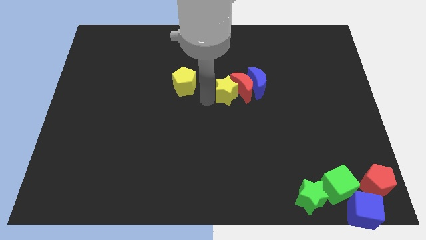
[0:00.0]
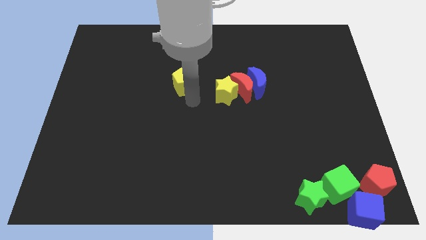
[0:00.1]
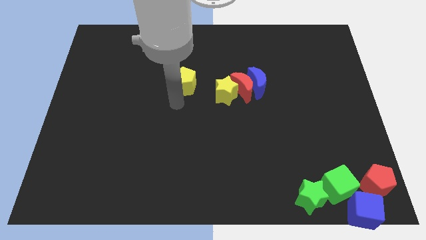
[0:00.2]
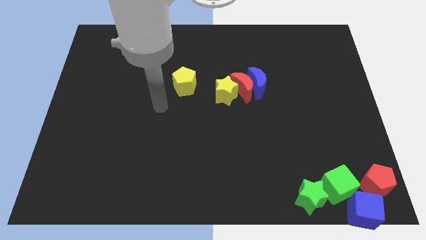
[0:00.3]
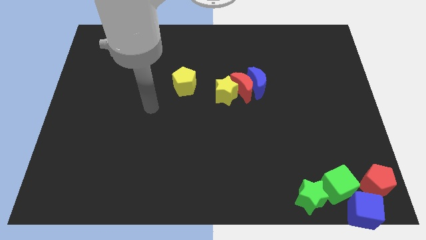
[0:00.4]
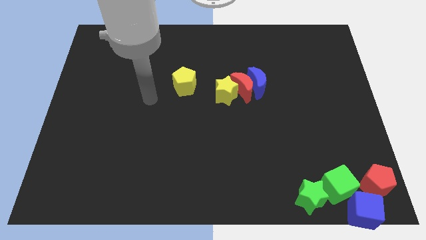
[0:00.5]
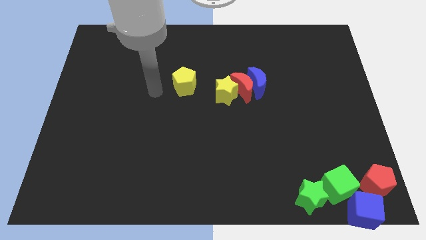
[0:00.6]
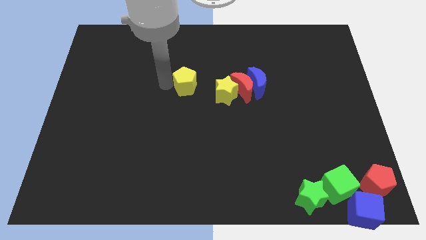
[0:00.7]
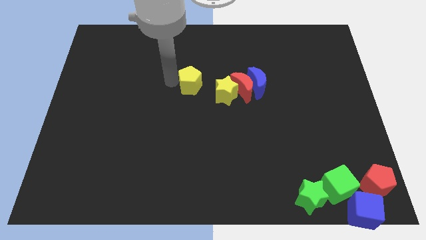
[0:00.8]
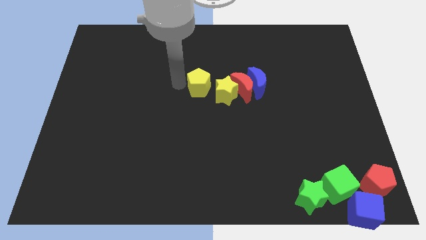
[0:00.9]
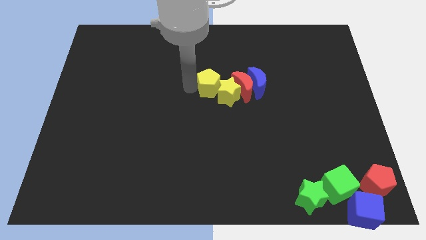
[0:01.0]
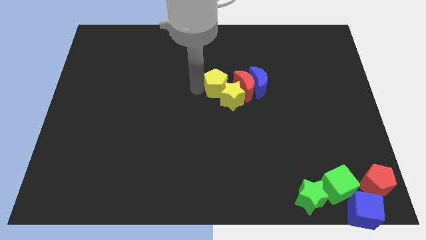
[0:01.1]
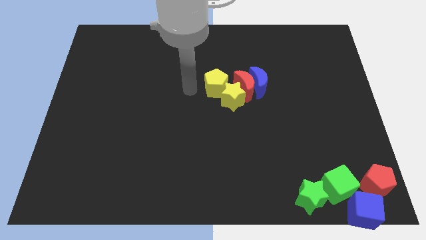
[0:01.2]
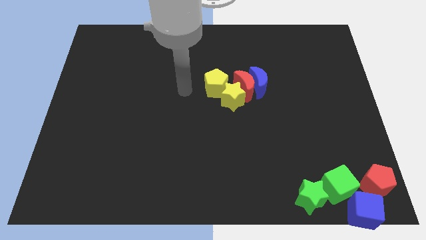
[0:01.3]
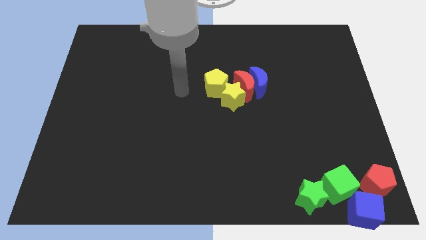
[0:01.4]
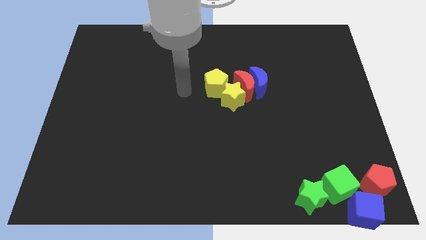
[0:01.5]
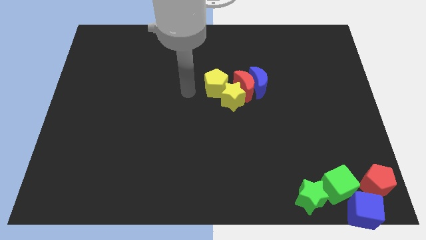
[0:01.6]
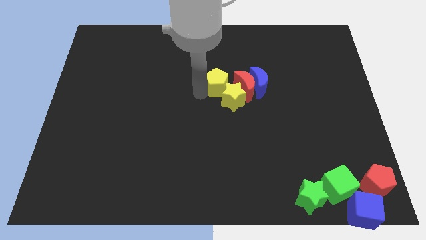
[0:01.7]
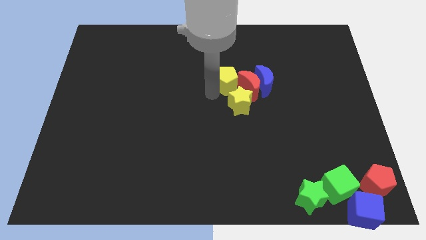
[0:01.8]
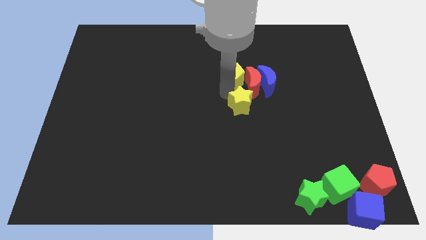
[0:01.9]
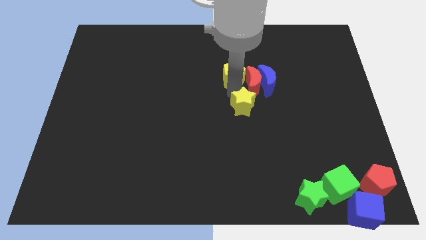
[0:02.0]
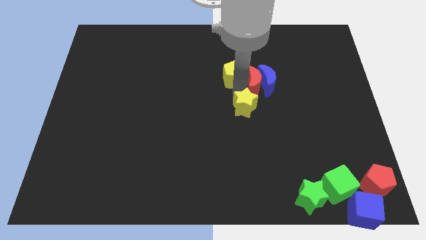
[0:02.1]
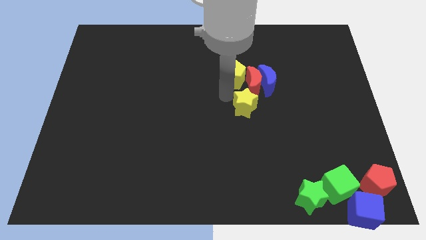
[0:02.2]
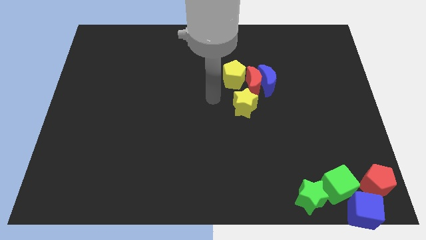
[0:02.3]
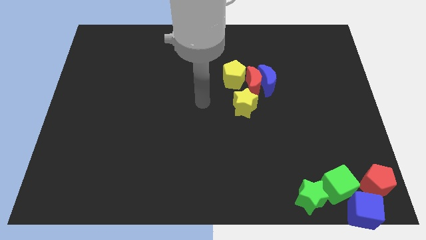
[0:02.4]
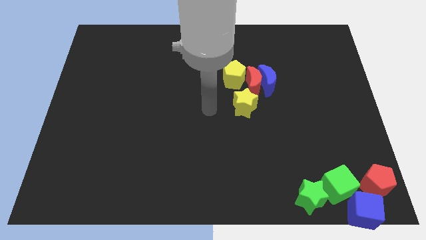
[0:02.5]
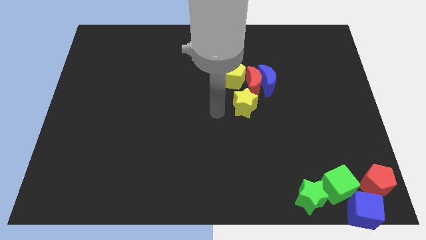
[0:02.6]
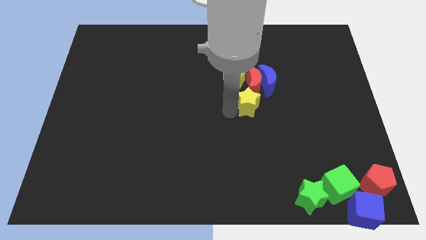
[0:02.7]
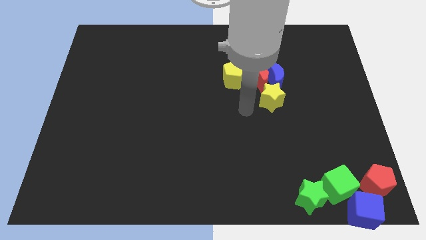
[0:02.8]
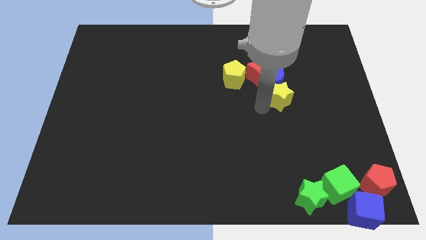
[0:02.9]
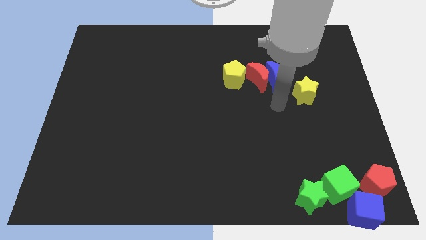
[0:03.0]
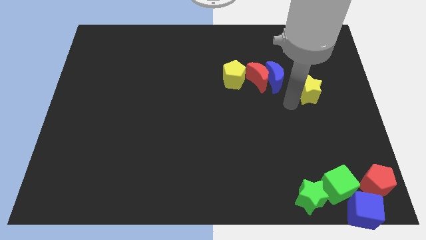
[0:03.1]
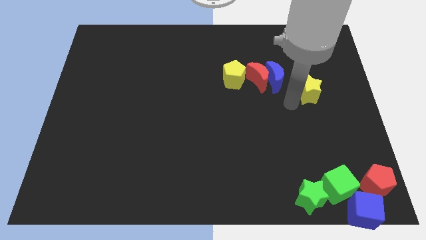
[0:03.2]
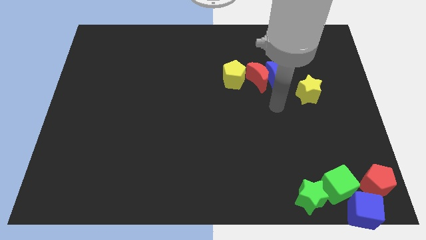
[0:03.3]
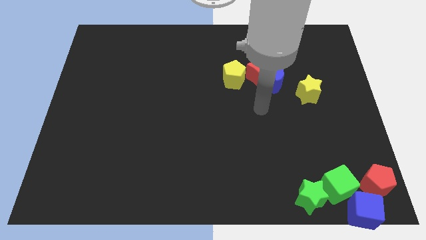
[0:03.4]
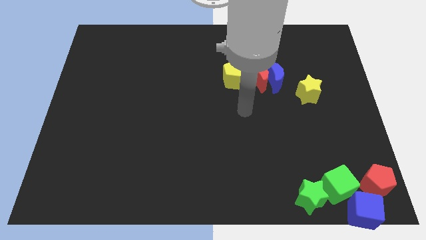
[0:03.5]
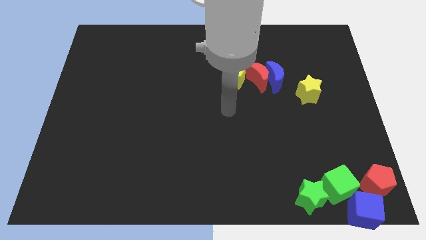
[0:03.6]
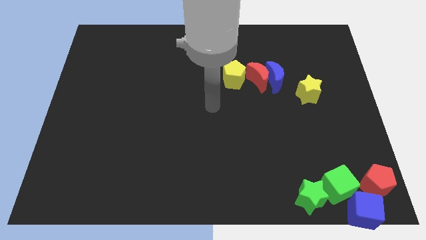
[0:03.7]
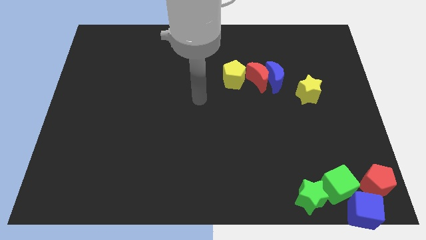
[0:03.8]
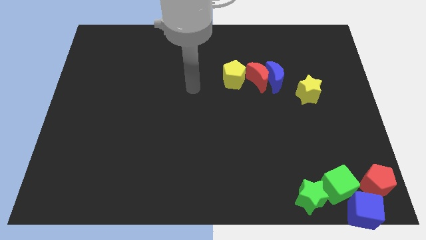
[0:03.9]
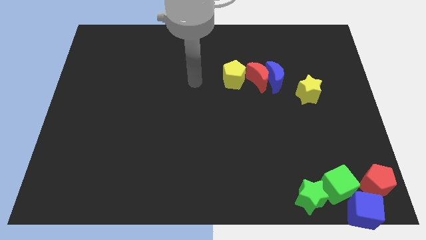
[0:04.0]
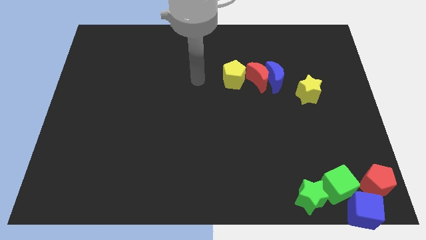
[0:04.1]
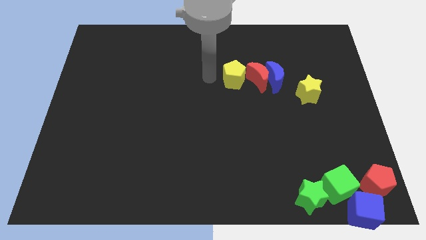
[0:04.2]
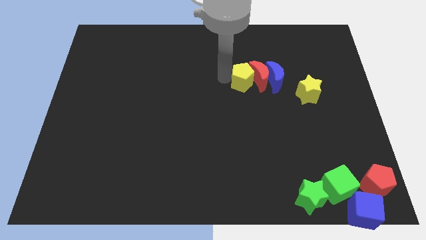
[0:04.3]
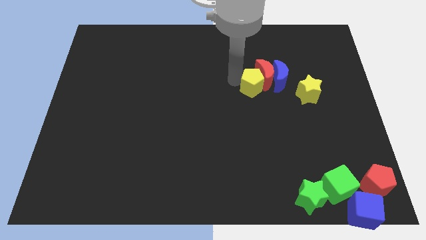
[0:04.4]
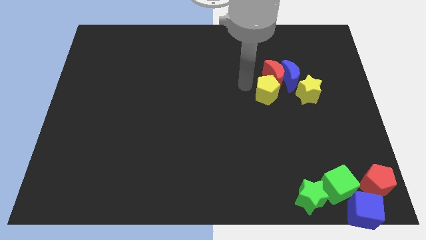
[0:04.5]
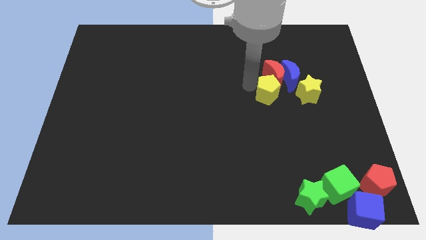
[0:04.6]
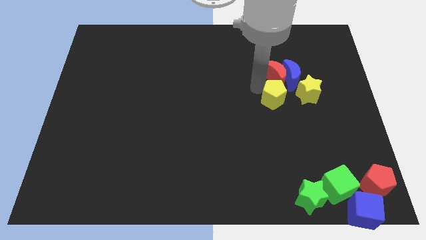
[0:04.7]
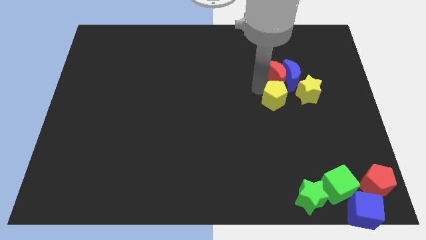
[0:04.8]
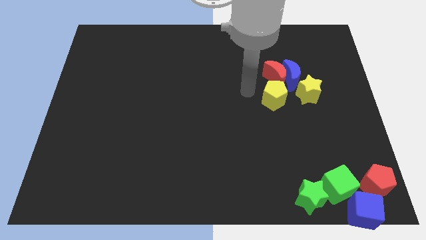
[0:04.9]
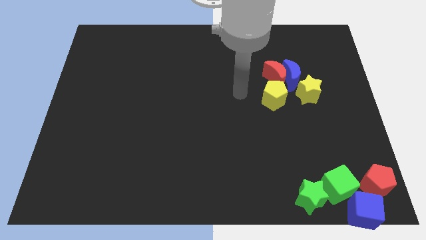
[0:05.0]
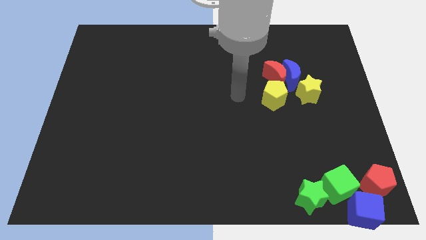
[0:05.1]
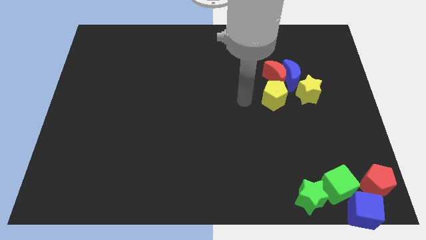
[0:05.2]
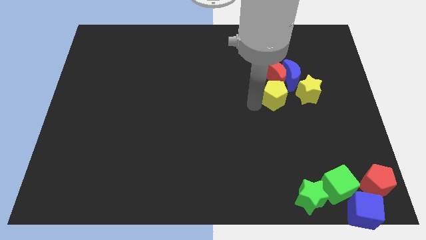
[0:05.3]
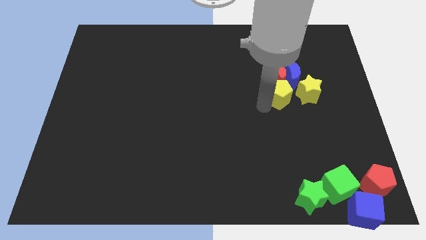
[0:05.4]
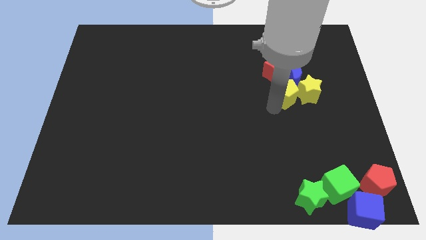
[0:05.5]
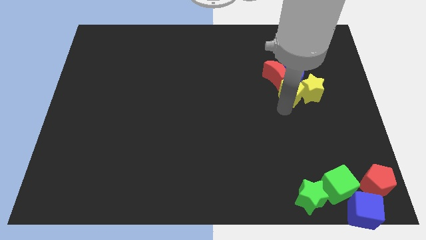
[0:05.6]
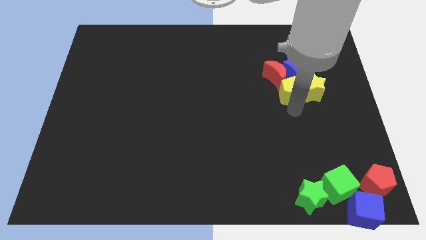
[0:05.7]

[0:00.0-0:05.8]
slide the group of blocks towards the top right side of the board

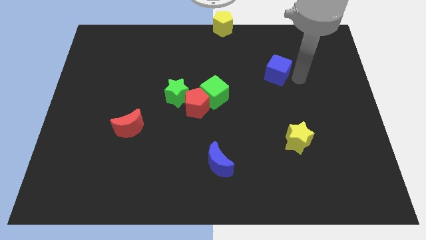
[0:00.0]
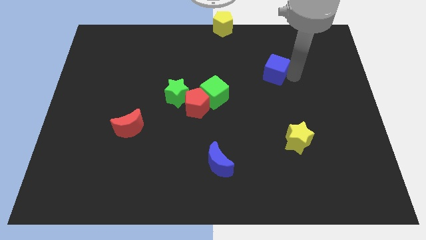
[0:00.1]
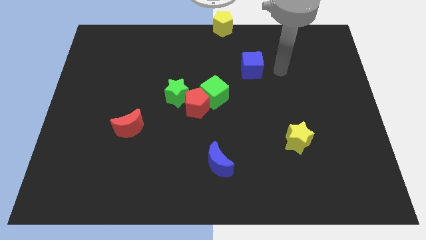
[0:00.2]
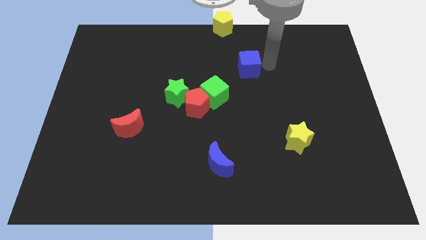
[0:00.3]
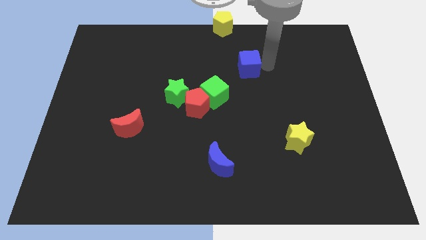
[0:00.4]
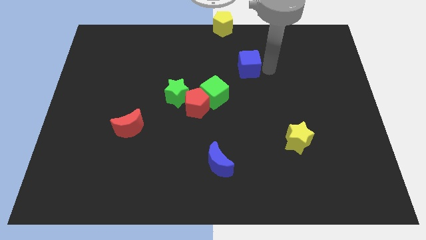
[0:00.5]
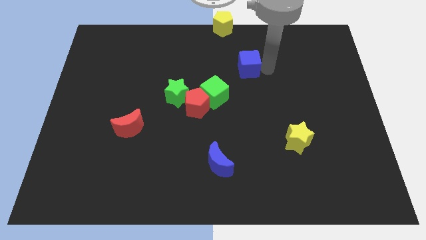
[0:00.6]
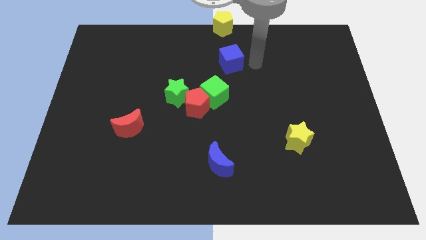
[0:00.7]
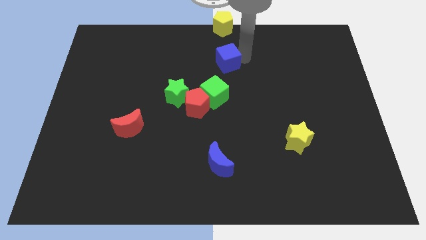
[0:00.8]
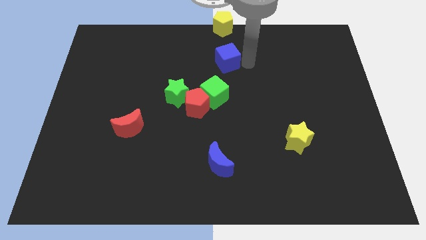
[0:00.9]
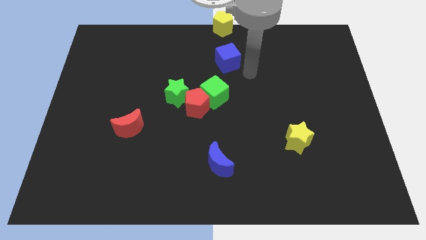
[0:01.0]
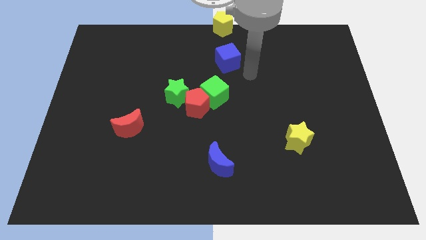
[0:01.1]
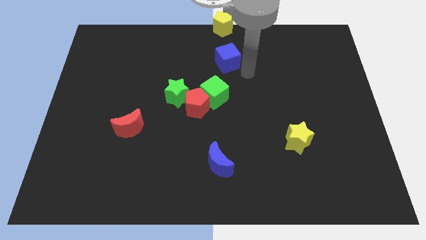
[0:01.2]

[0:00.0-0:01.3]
place the blue cube below the yellow pentagon

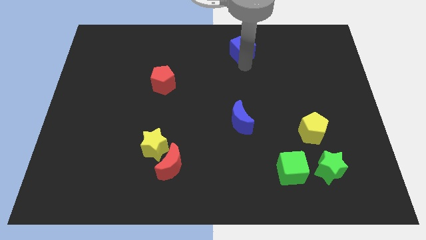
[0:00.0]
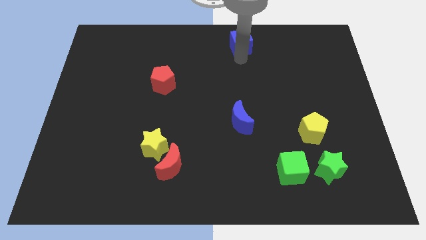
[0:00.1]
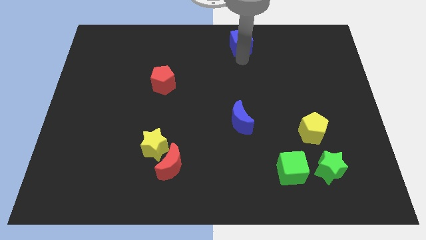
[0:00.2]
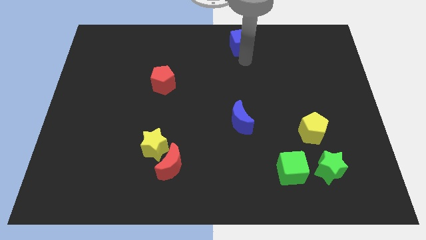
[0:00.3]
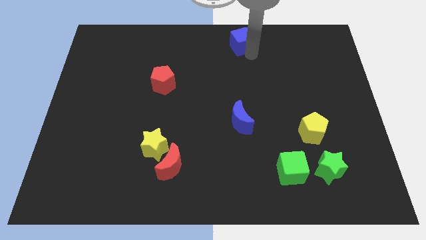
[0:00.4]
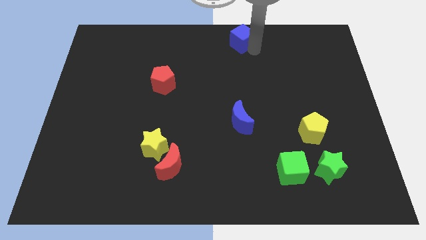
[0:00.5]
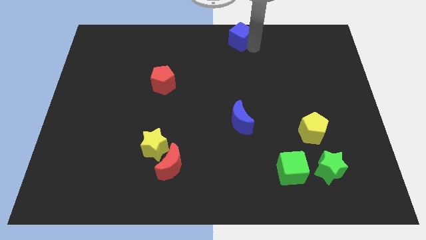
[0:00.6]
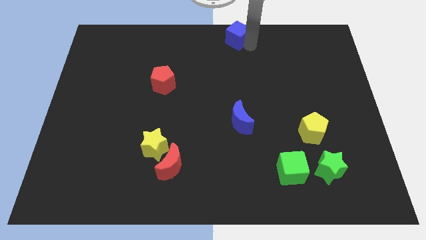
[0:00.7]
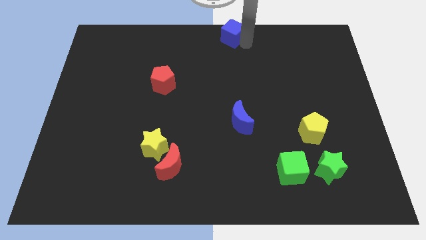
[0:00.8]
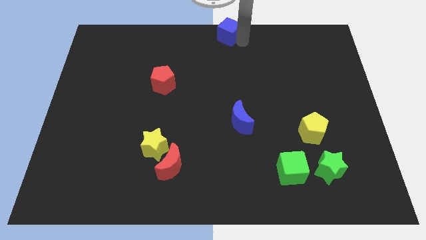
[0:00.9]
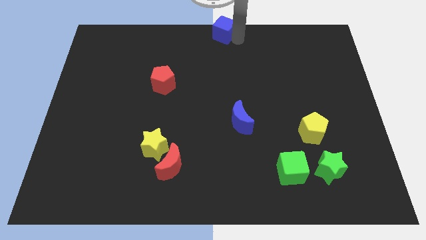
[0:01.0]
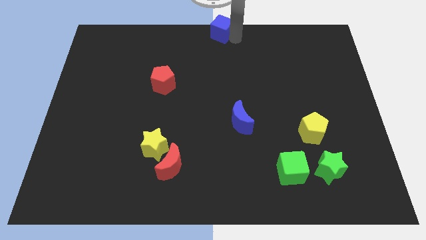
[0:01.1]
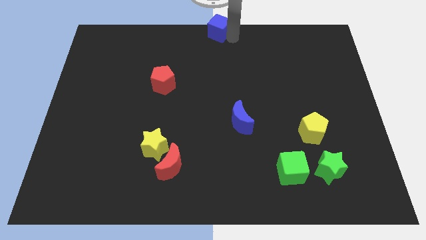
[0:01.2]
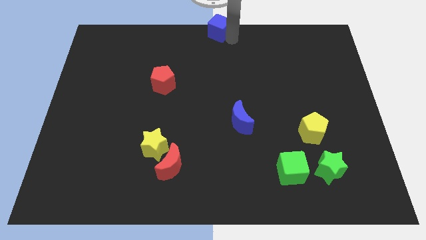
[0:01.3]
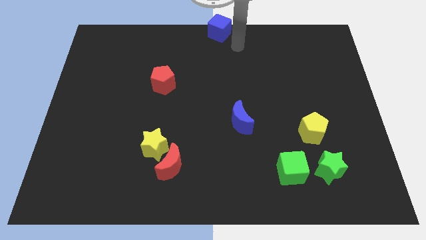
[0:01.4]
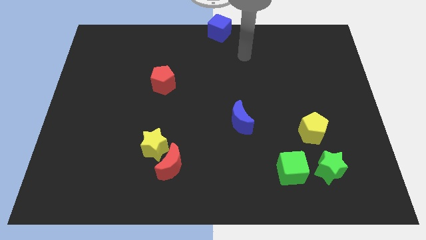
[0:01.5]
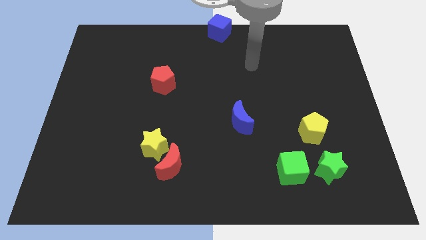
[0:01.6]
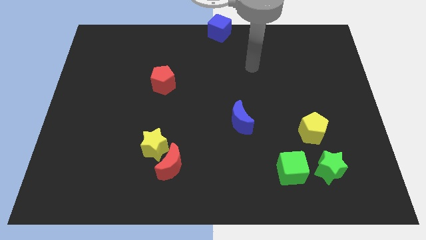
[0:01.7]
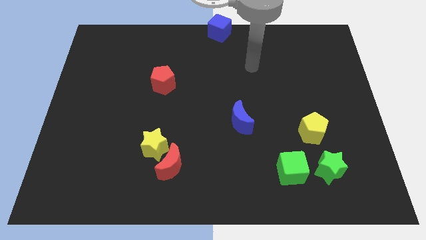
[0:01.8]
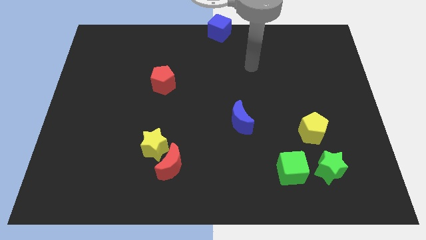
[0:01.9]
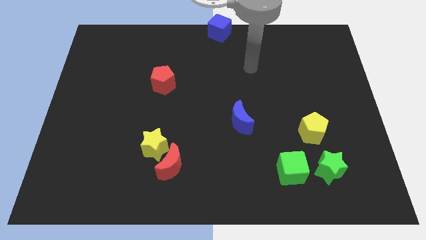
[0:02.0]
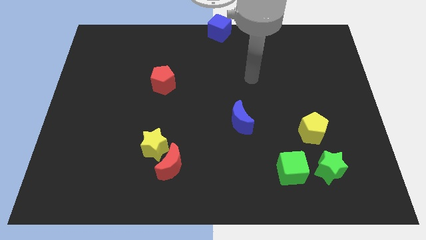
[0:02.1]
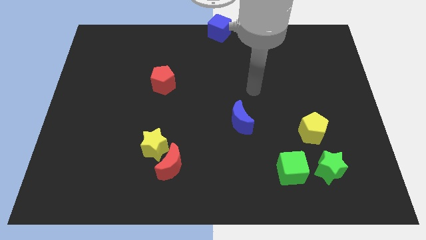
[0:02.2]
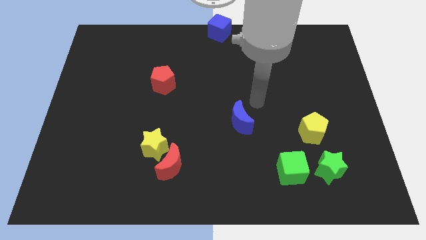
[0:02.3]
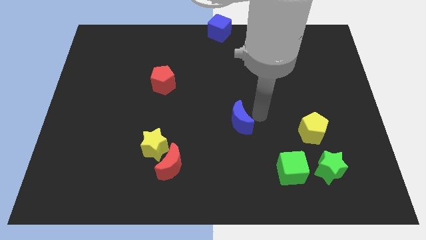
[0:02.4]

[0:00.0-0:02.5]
move blue cube to center top
